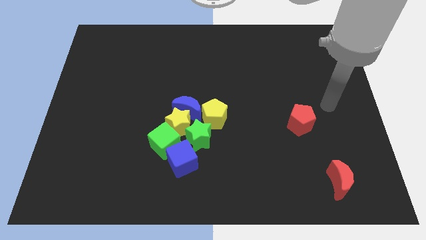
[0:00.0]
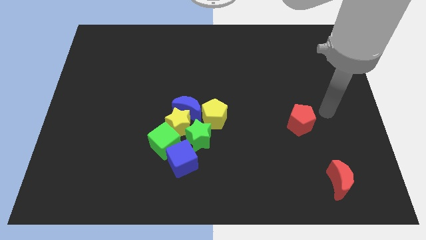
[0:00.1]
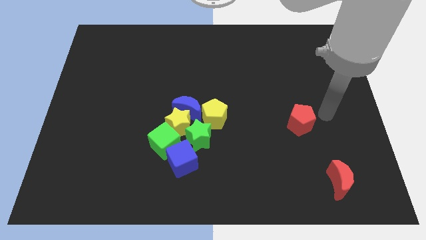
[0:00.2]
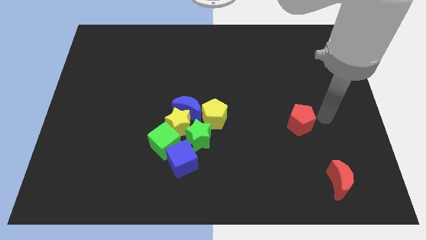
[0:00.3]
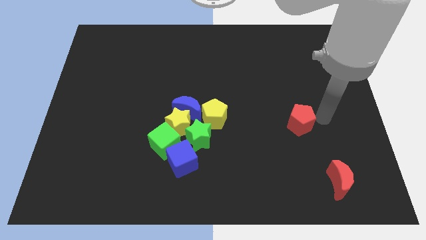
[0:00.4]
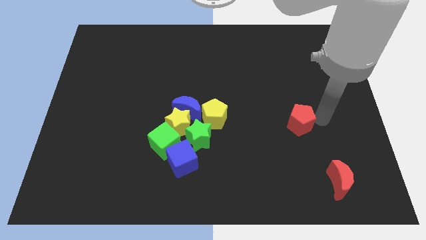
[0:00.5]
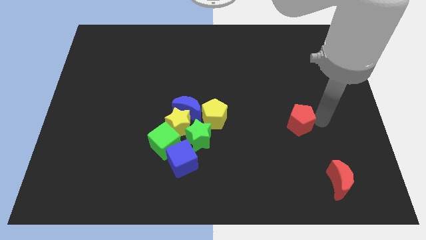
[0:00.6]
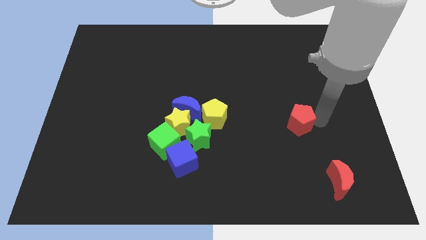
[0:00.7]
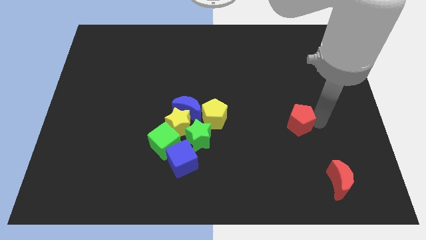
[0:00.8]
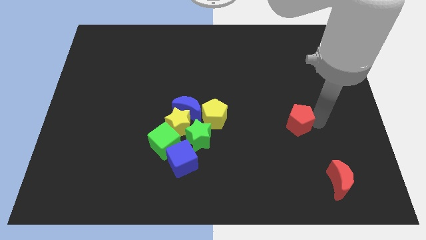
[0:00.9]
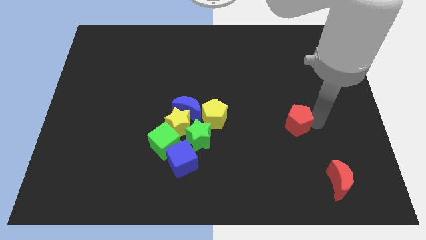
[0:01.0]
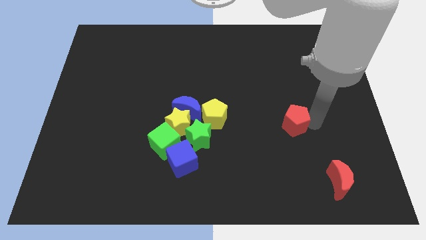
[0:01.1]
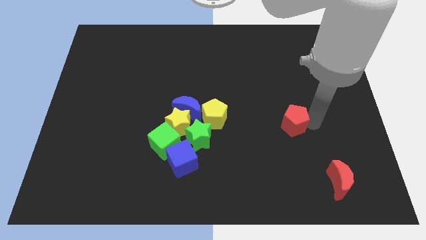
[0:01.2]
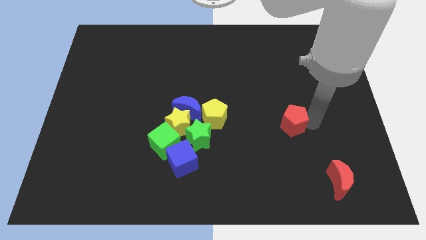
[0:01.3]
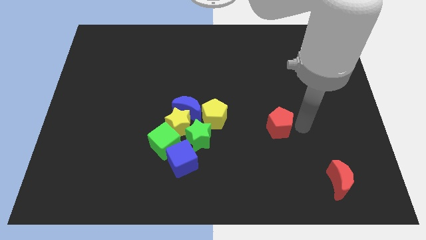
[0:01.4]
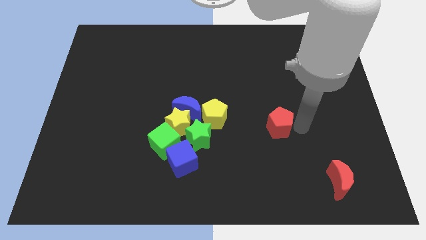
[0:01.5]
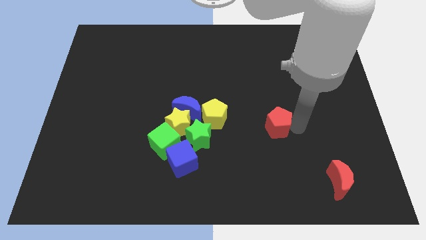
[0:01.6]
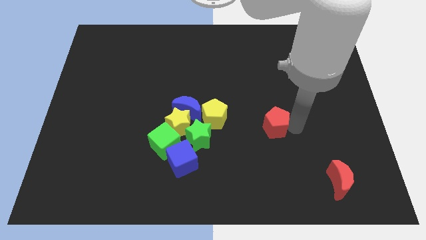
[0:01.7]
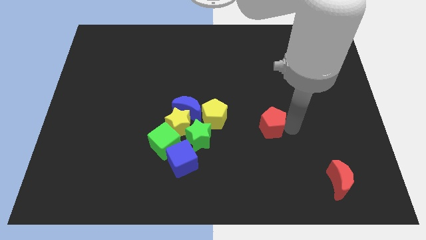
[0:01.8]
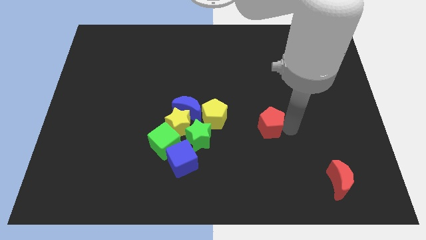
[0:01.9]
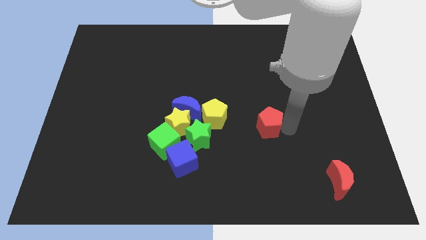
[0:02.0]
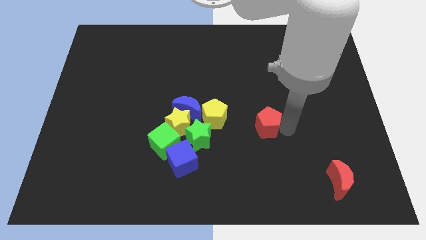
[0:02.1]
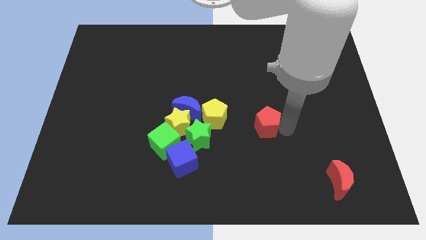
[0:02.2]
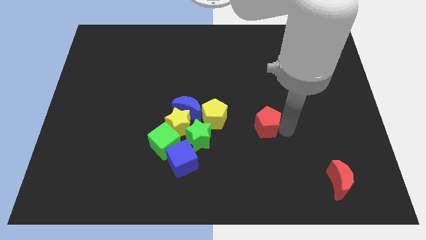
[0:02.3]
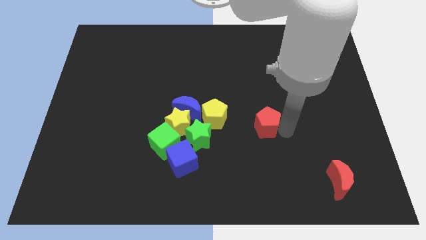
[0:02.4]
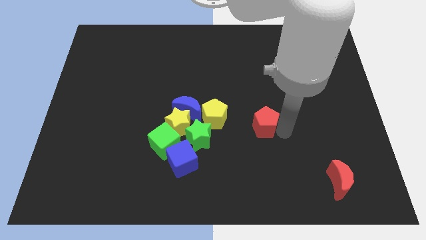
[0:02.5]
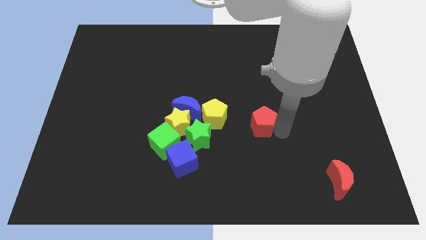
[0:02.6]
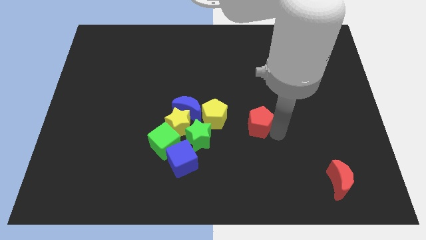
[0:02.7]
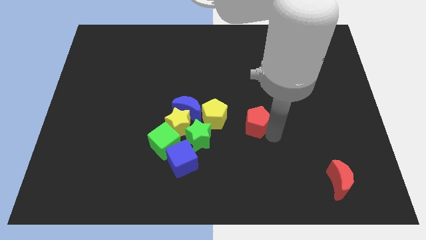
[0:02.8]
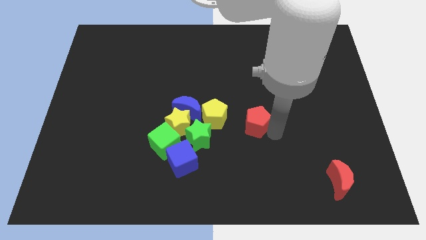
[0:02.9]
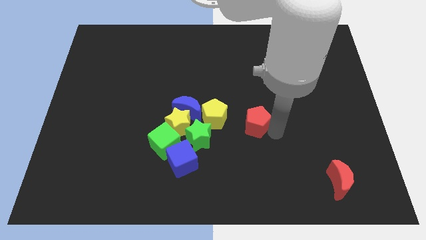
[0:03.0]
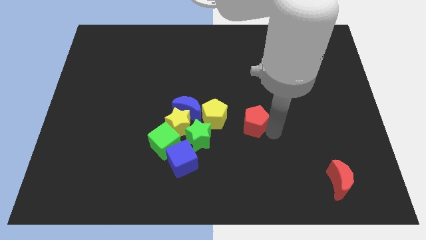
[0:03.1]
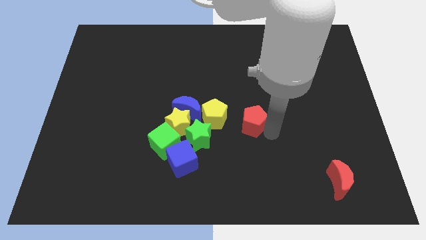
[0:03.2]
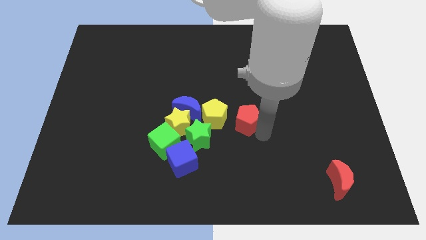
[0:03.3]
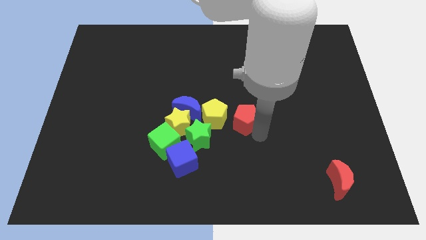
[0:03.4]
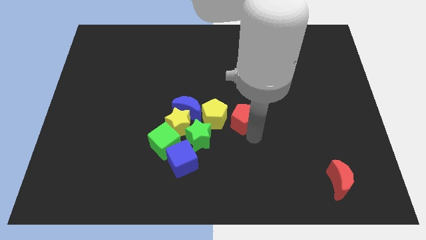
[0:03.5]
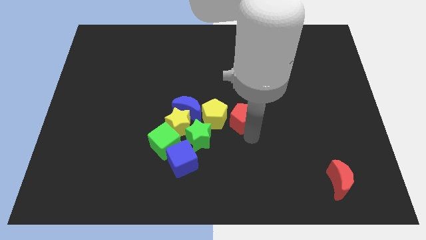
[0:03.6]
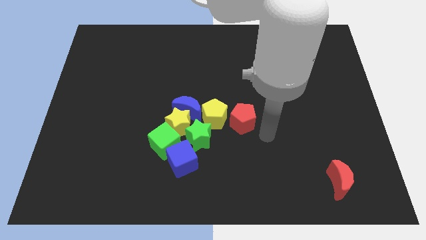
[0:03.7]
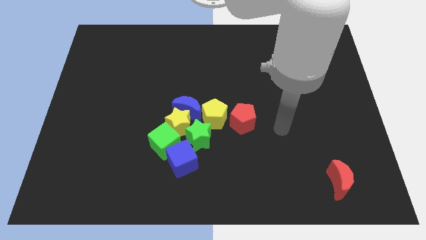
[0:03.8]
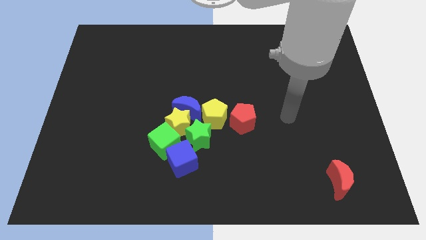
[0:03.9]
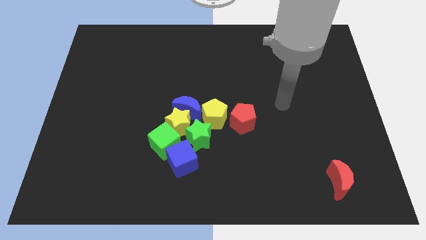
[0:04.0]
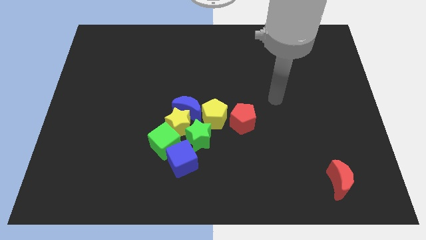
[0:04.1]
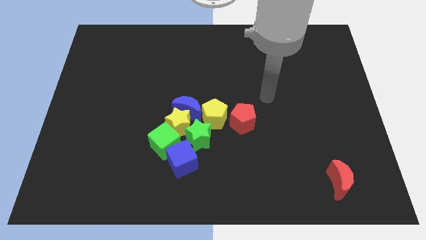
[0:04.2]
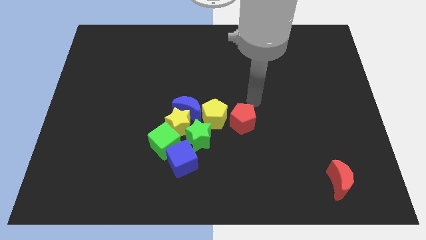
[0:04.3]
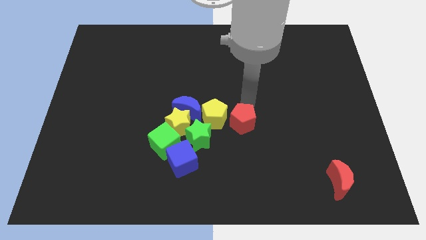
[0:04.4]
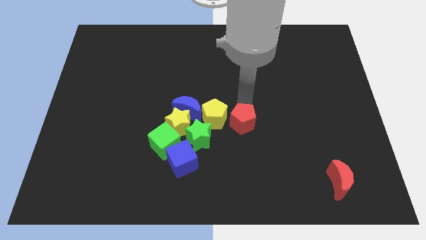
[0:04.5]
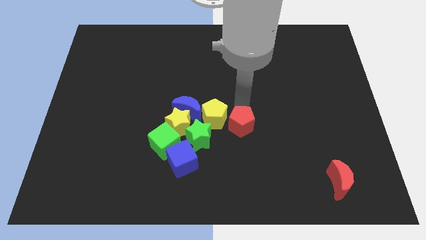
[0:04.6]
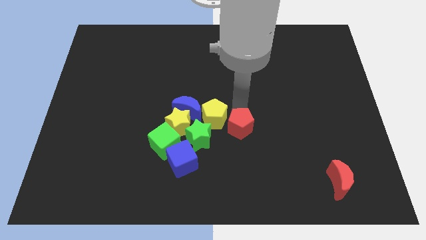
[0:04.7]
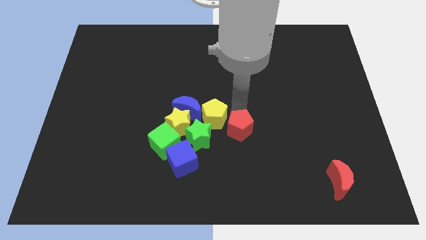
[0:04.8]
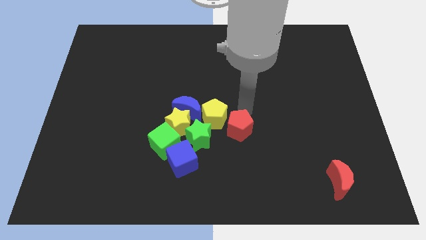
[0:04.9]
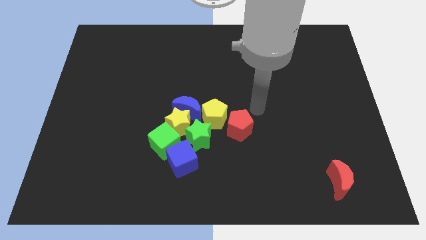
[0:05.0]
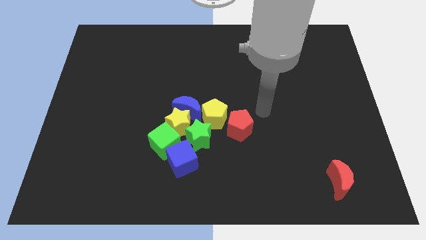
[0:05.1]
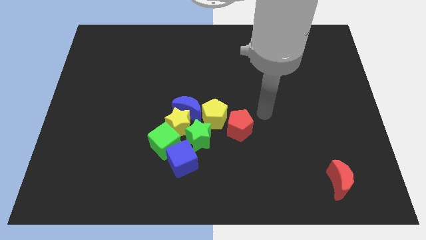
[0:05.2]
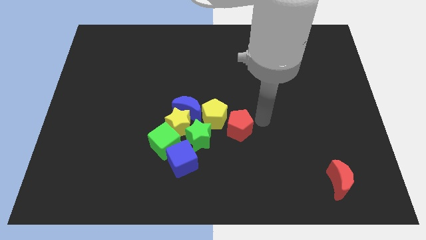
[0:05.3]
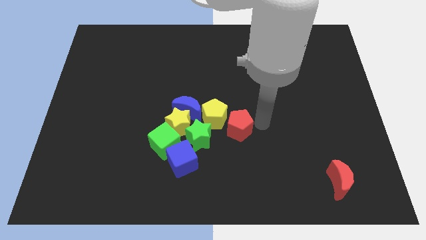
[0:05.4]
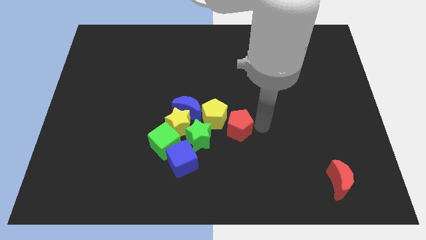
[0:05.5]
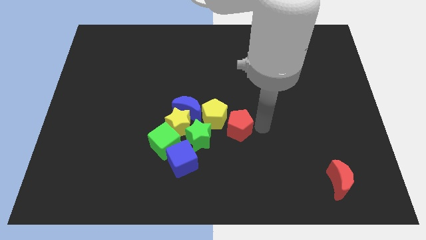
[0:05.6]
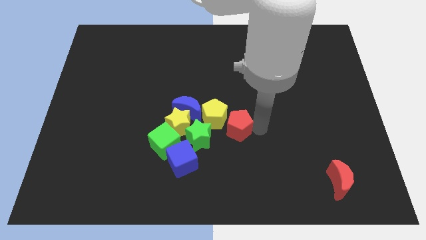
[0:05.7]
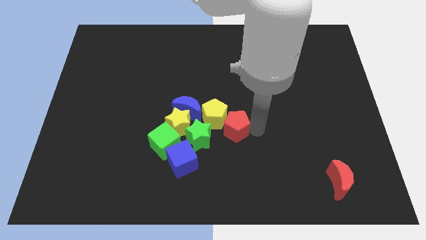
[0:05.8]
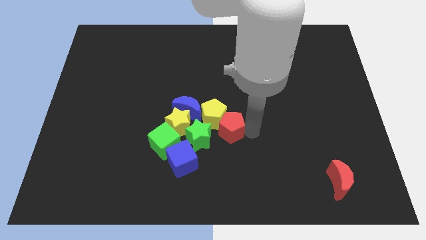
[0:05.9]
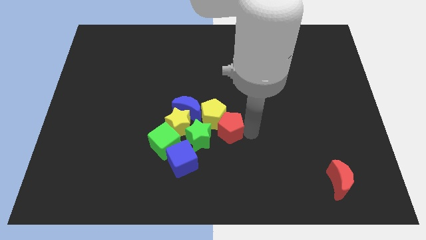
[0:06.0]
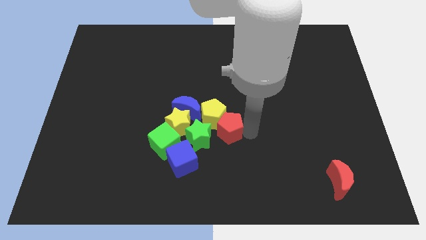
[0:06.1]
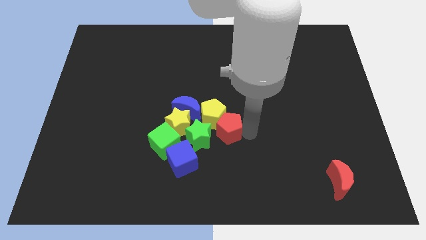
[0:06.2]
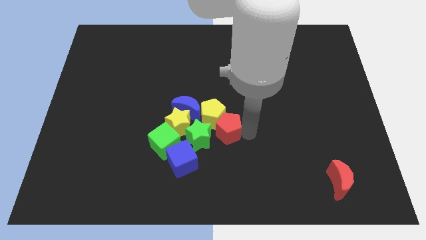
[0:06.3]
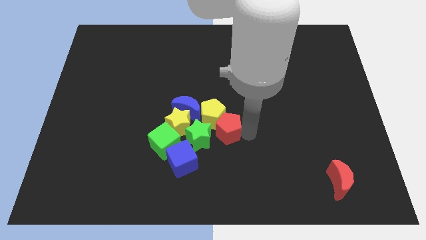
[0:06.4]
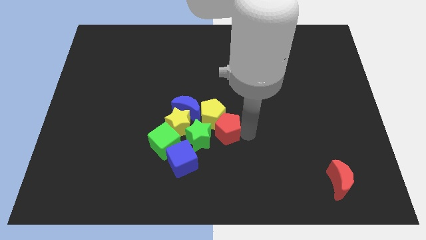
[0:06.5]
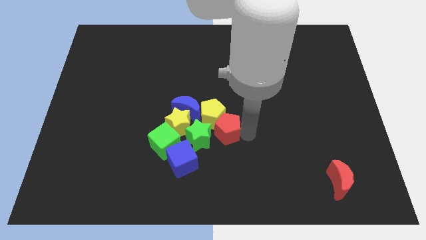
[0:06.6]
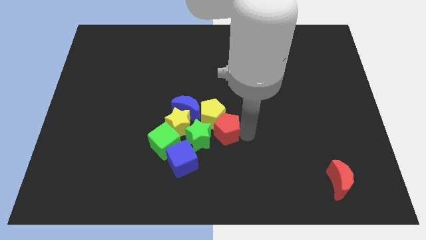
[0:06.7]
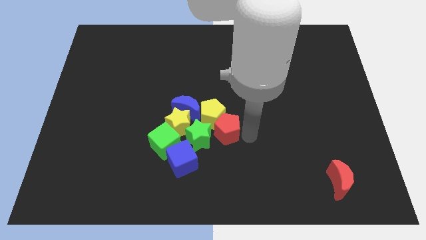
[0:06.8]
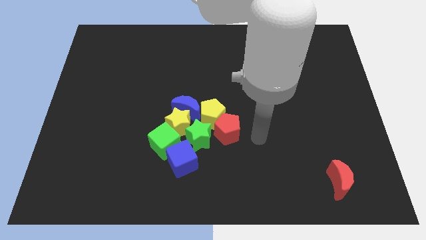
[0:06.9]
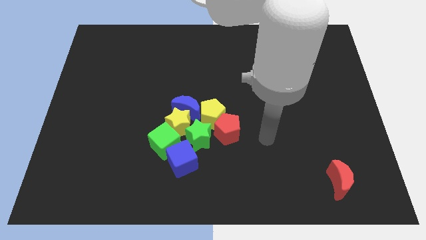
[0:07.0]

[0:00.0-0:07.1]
push the red pentagon into the yellow pentagon

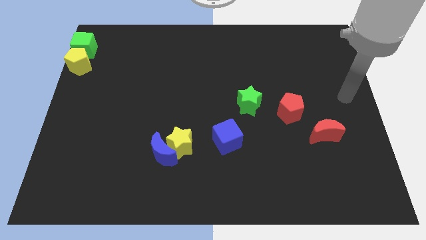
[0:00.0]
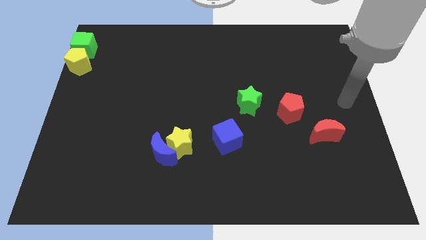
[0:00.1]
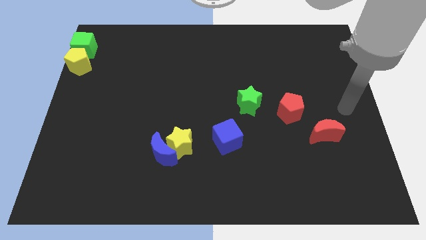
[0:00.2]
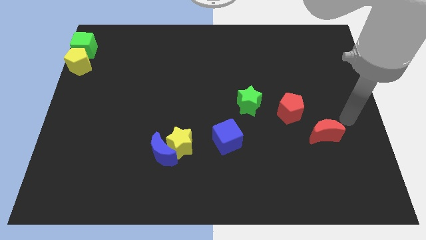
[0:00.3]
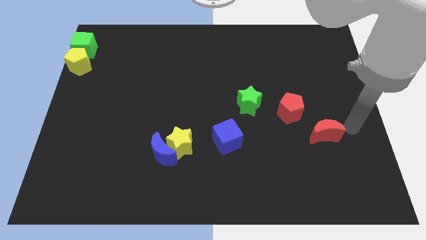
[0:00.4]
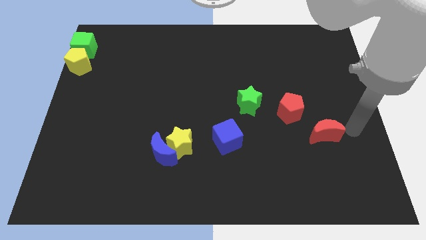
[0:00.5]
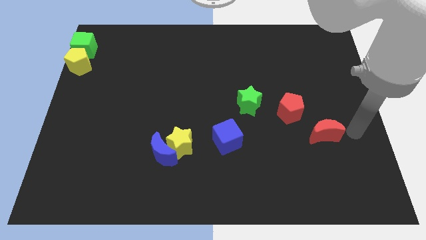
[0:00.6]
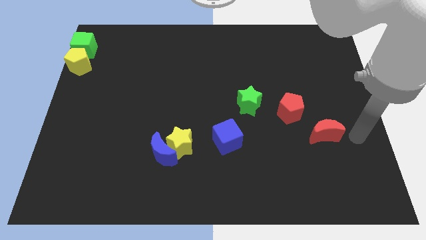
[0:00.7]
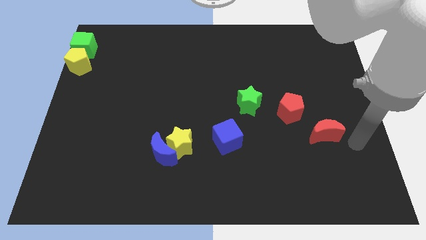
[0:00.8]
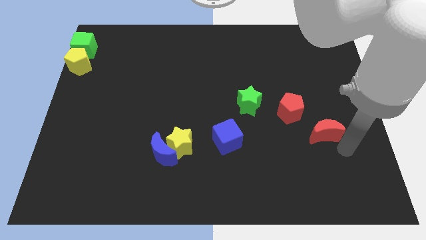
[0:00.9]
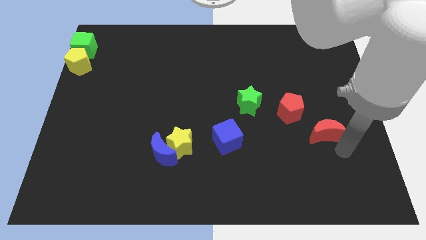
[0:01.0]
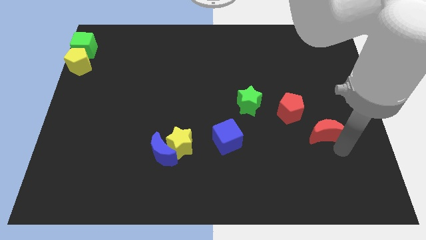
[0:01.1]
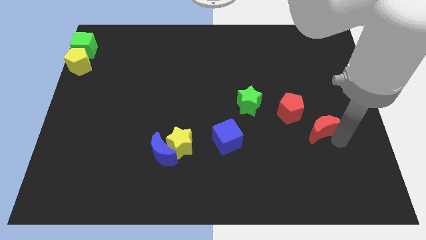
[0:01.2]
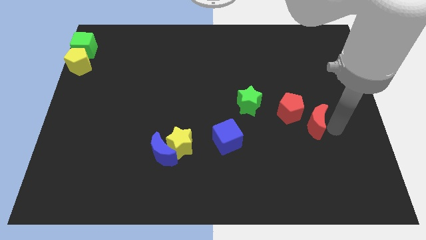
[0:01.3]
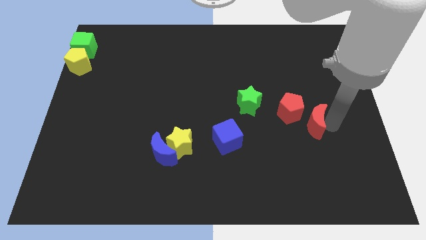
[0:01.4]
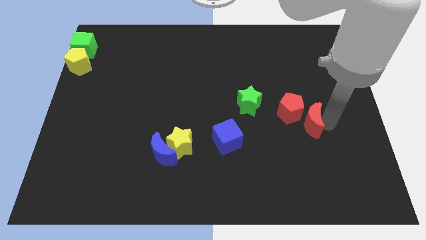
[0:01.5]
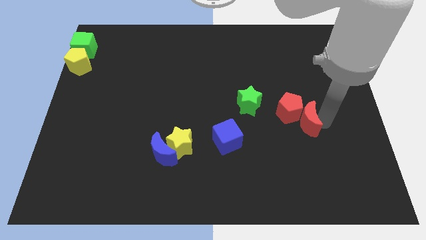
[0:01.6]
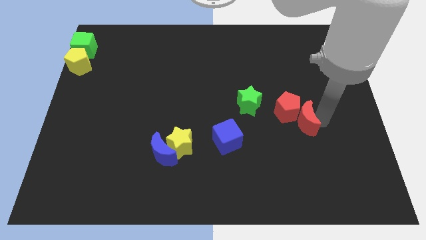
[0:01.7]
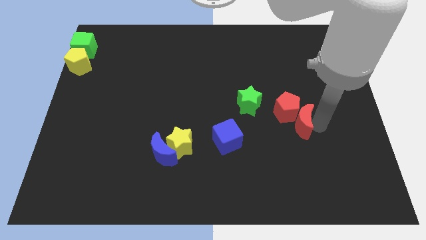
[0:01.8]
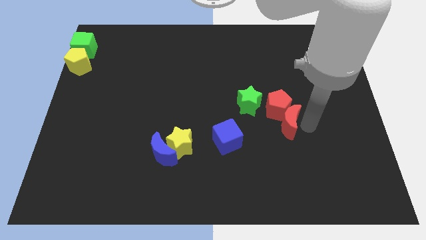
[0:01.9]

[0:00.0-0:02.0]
put the red moon into the red pentagon
